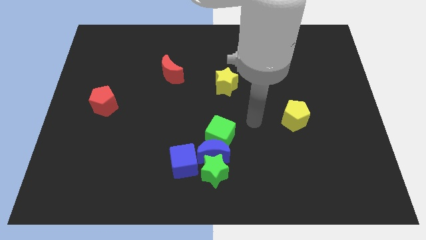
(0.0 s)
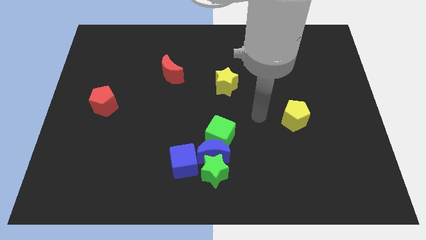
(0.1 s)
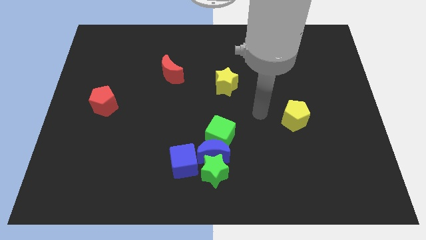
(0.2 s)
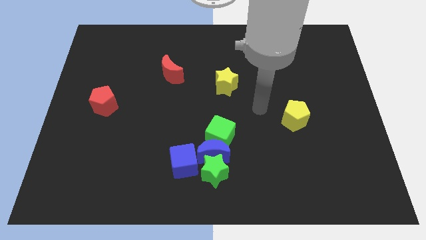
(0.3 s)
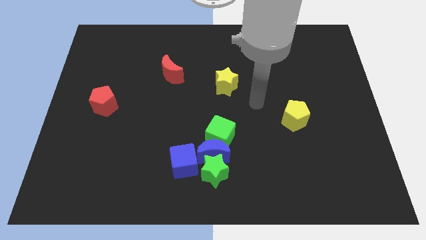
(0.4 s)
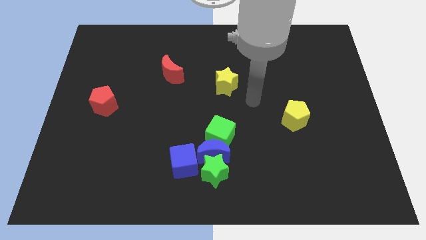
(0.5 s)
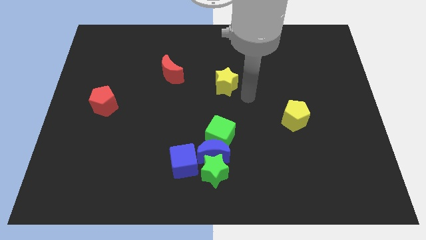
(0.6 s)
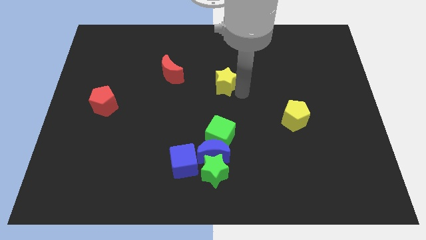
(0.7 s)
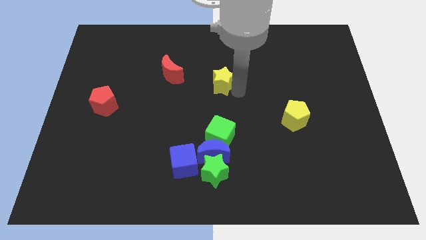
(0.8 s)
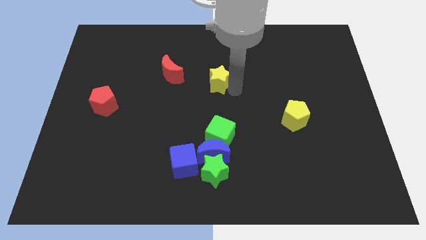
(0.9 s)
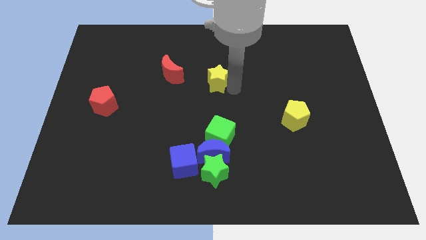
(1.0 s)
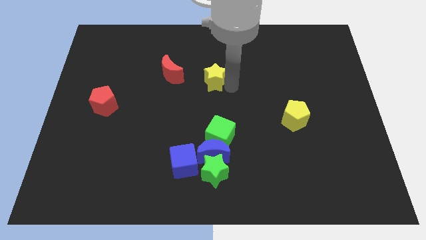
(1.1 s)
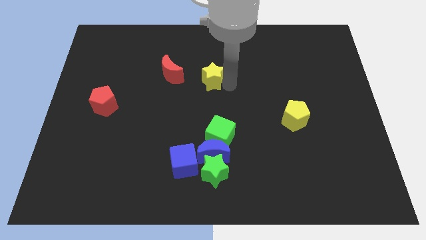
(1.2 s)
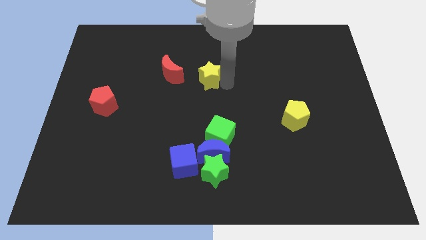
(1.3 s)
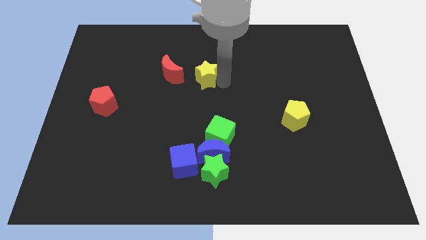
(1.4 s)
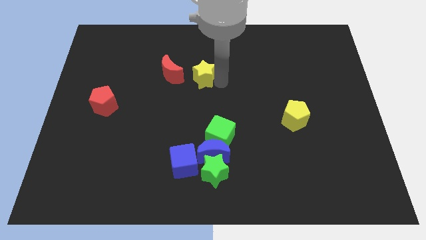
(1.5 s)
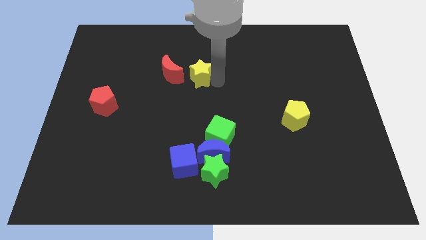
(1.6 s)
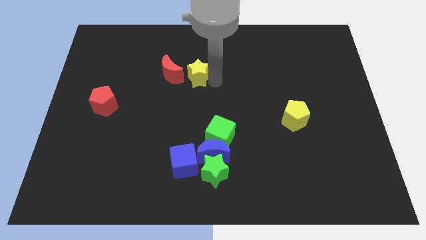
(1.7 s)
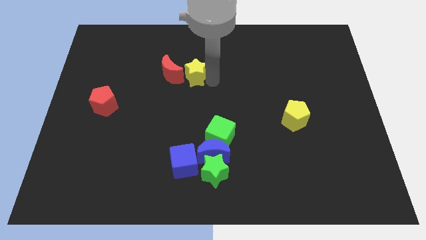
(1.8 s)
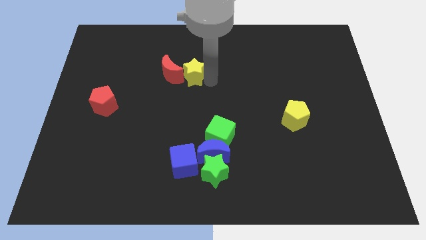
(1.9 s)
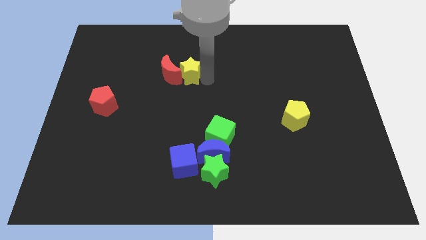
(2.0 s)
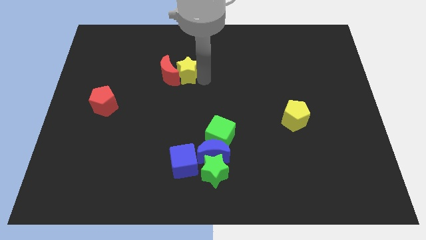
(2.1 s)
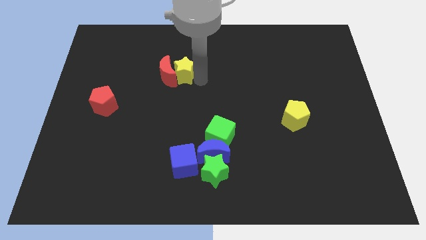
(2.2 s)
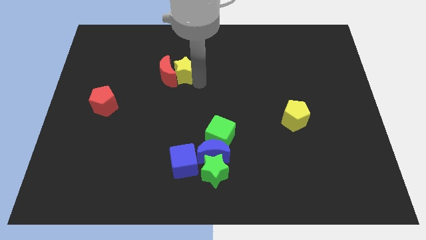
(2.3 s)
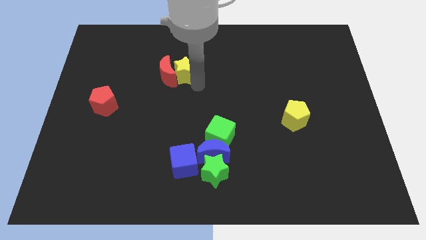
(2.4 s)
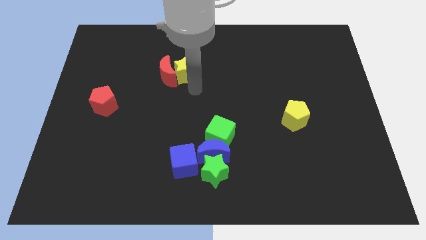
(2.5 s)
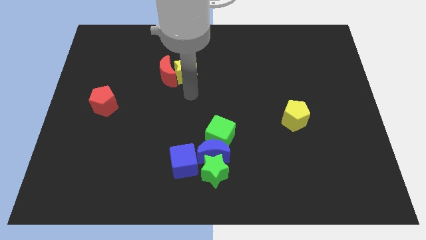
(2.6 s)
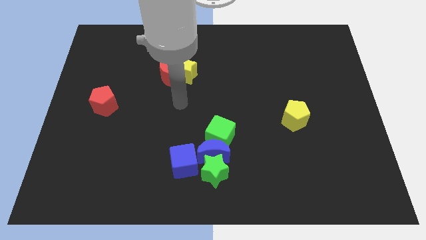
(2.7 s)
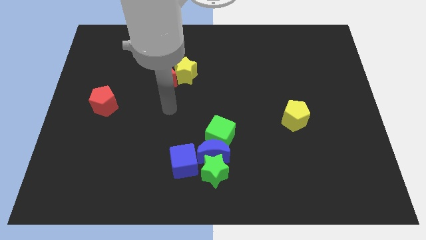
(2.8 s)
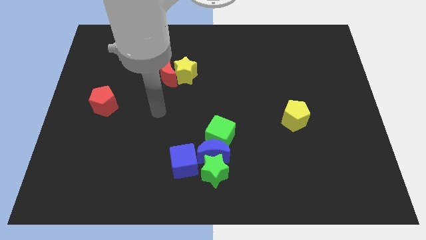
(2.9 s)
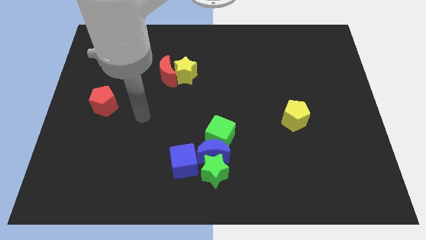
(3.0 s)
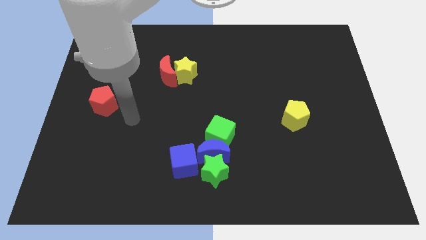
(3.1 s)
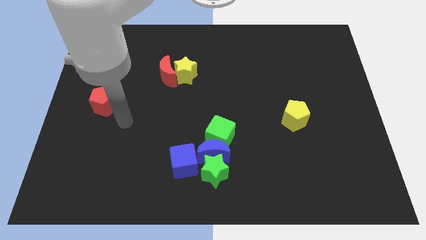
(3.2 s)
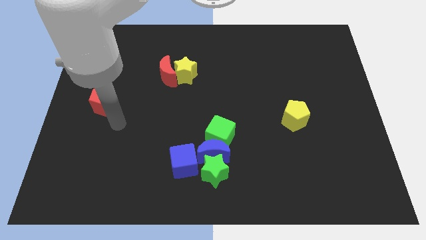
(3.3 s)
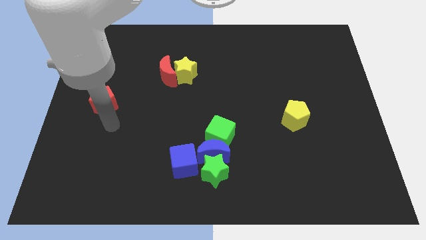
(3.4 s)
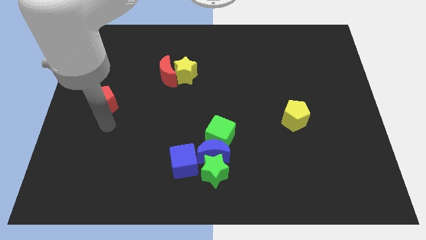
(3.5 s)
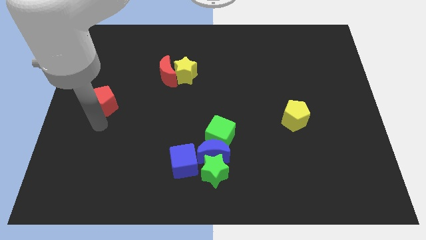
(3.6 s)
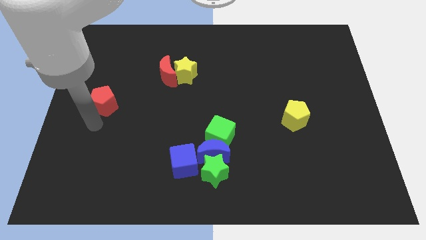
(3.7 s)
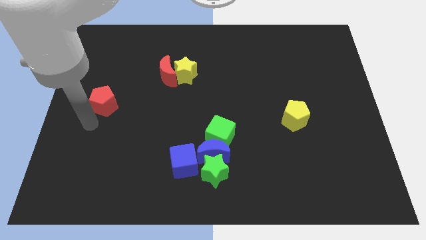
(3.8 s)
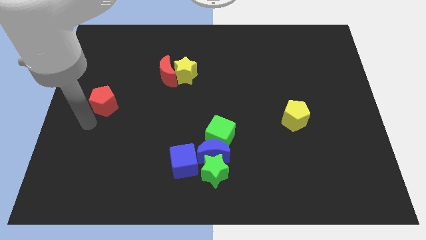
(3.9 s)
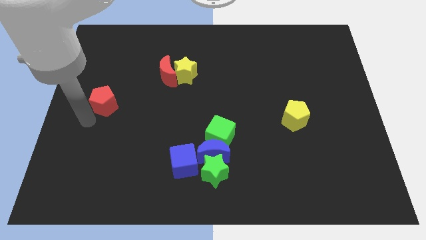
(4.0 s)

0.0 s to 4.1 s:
move the arm to the center left

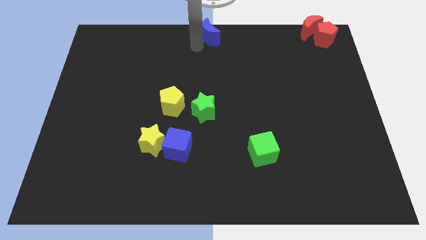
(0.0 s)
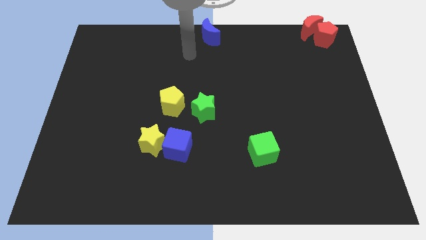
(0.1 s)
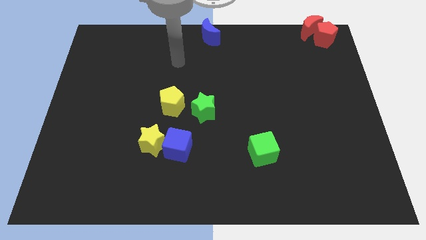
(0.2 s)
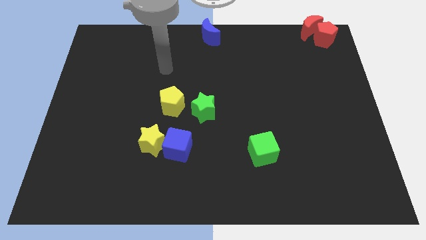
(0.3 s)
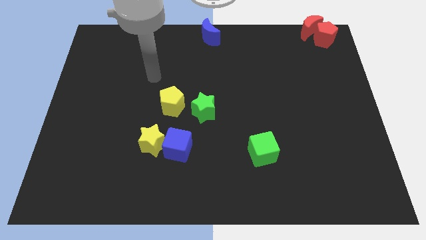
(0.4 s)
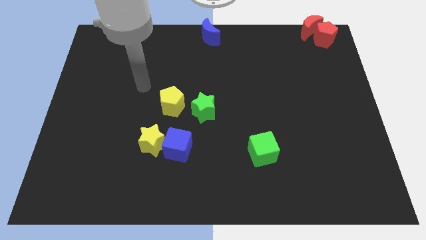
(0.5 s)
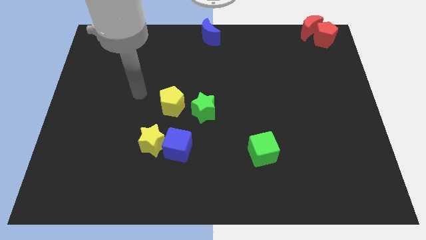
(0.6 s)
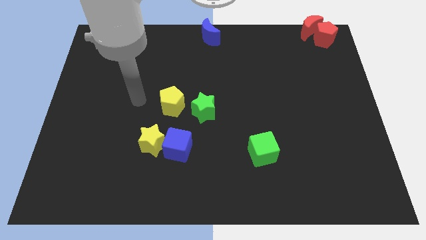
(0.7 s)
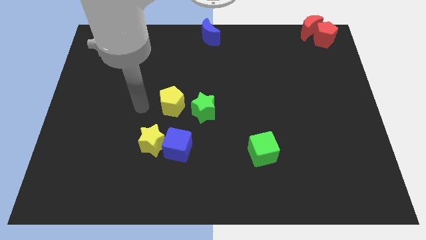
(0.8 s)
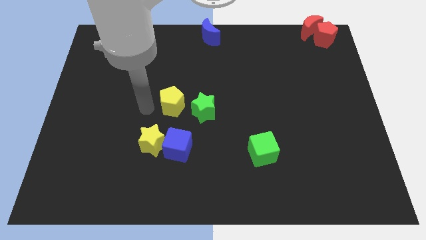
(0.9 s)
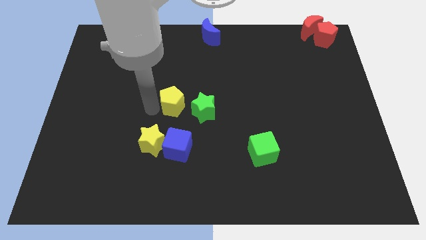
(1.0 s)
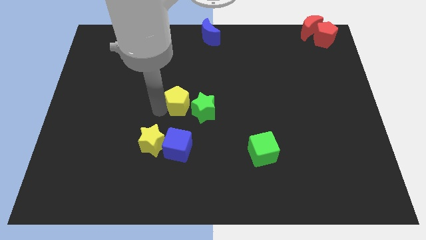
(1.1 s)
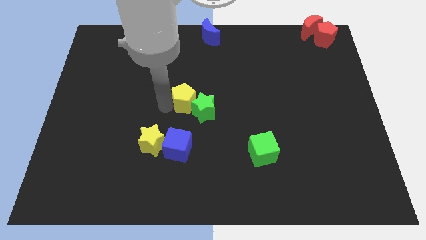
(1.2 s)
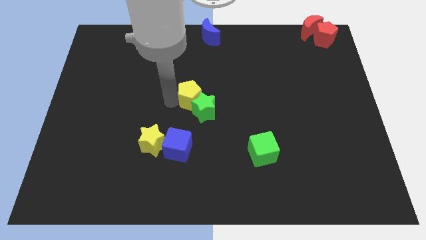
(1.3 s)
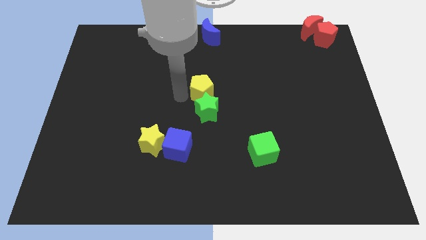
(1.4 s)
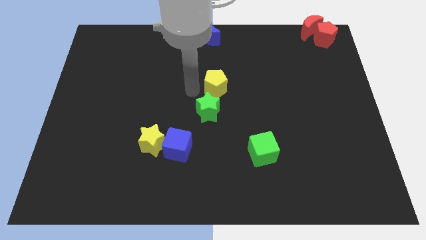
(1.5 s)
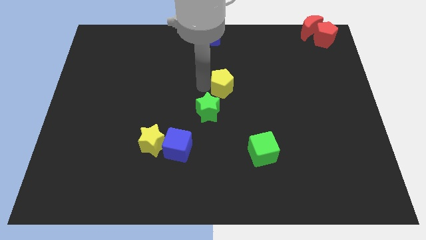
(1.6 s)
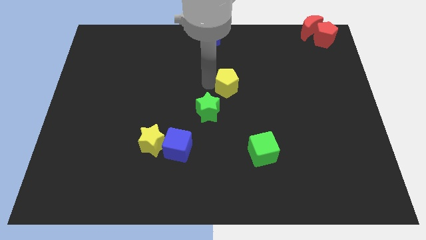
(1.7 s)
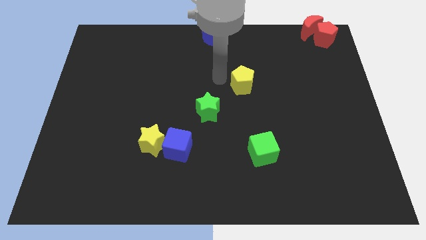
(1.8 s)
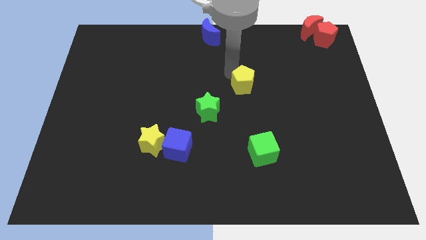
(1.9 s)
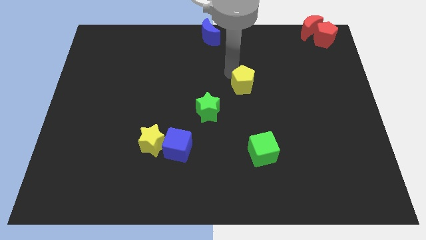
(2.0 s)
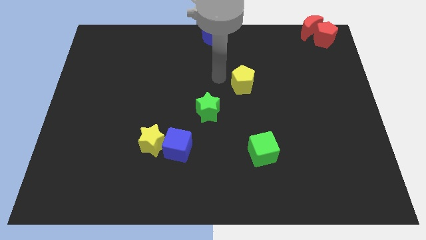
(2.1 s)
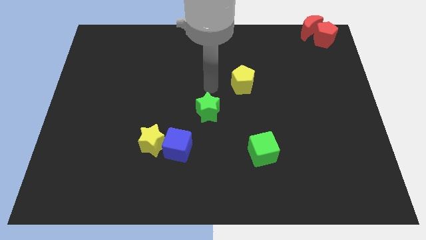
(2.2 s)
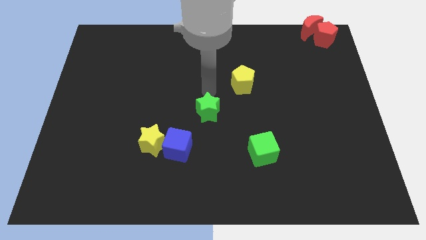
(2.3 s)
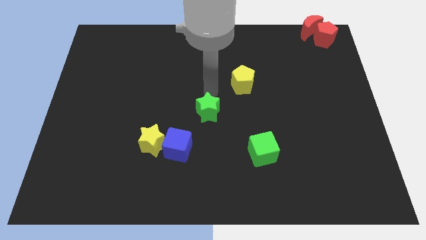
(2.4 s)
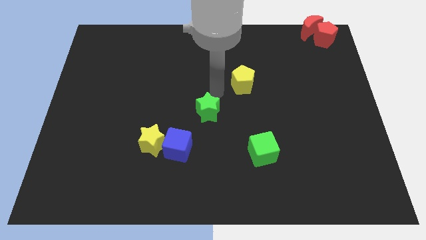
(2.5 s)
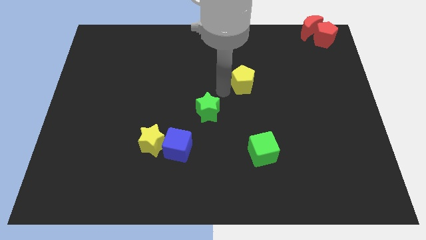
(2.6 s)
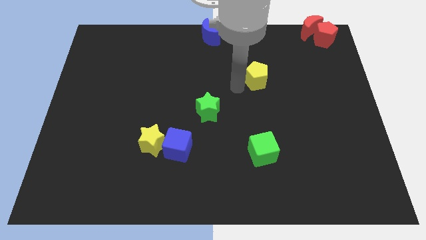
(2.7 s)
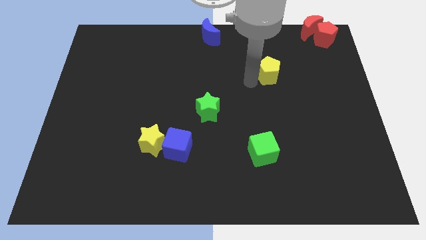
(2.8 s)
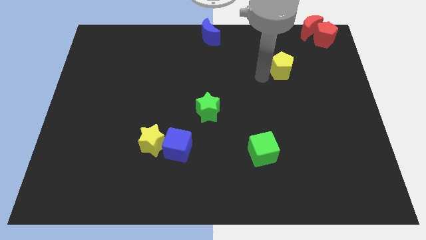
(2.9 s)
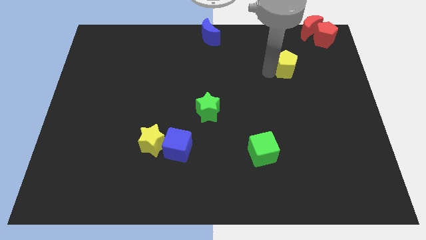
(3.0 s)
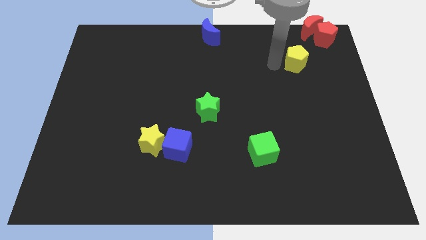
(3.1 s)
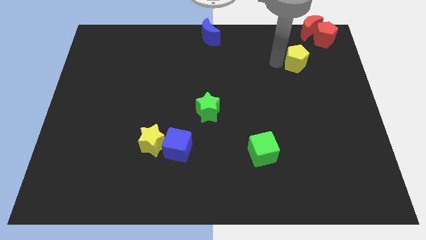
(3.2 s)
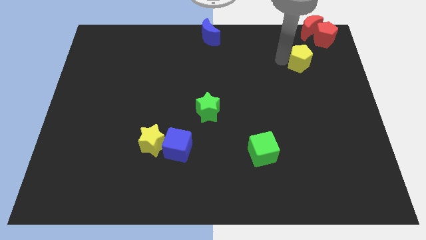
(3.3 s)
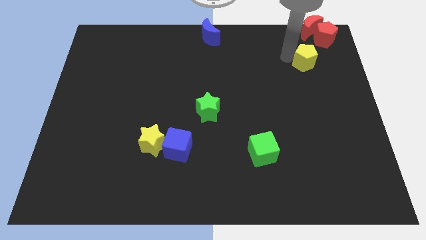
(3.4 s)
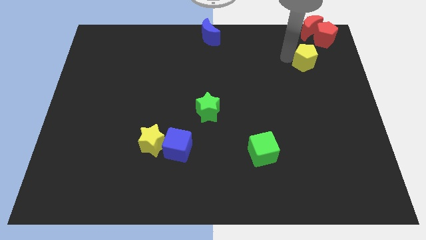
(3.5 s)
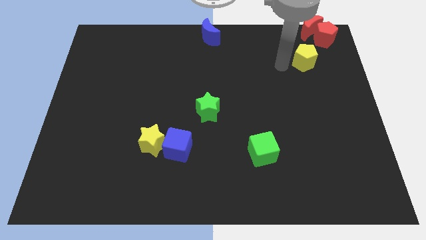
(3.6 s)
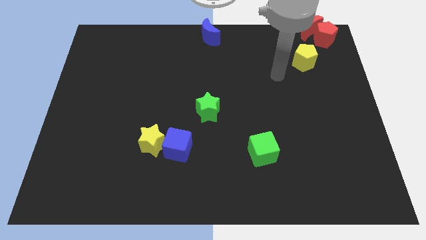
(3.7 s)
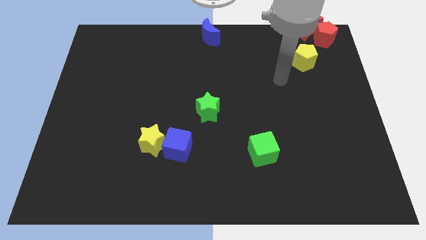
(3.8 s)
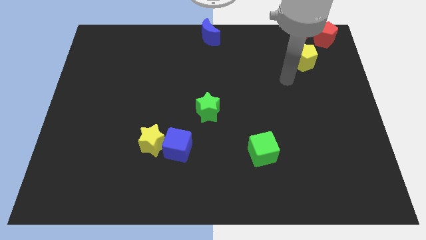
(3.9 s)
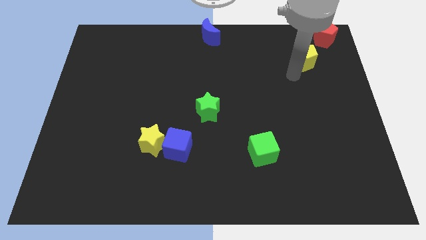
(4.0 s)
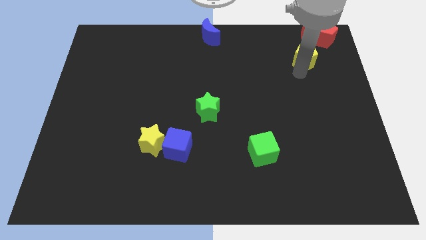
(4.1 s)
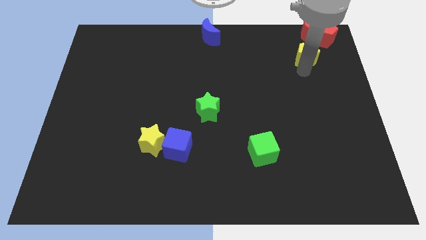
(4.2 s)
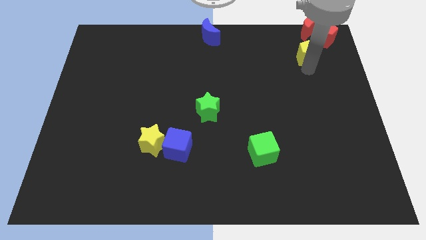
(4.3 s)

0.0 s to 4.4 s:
push the yellow pentagon towards the red blocks

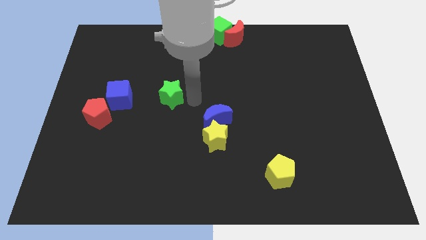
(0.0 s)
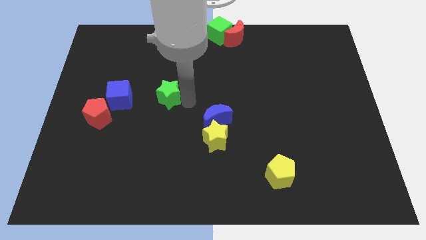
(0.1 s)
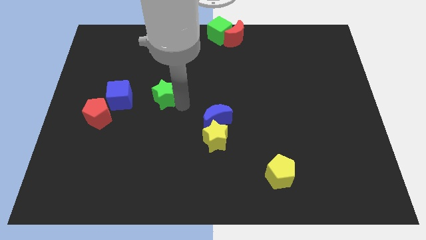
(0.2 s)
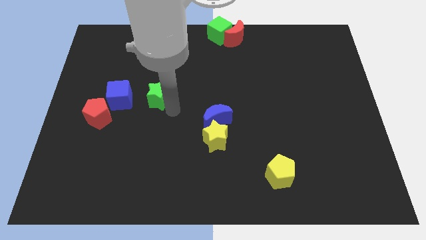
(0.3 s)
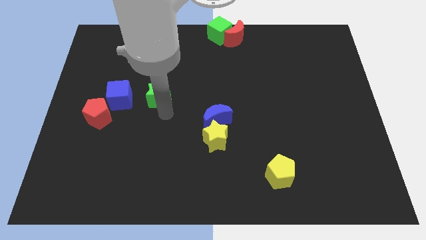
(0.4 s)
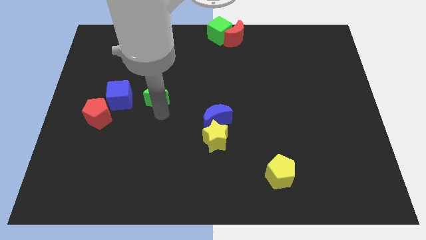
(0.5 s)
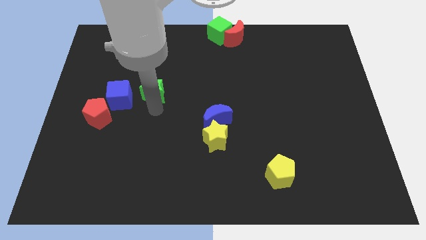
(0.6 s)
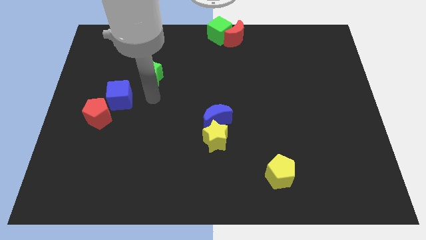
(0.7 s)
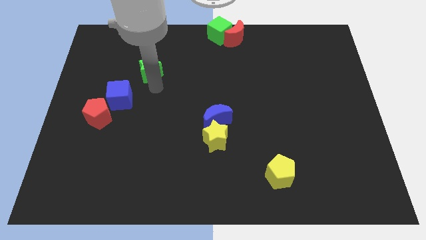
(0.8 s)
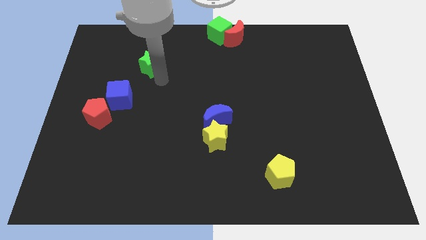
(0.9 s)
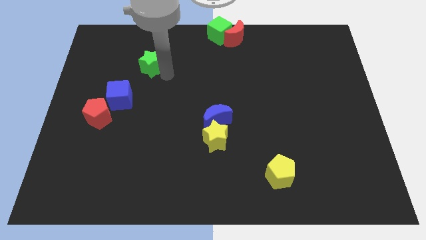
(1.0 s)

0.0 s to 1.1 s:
move the green star upward
